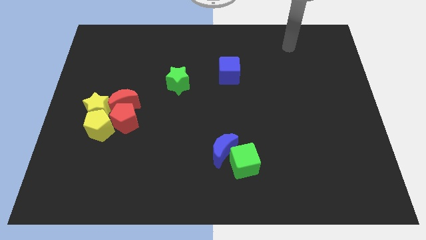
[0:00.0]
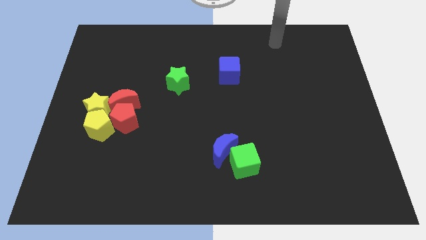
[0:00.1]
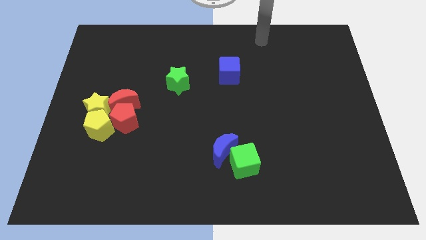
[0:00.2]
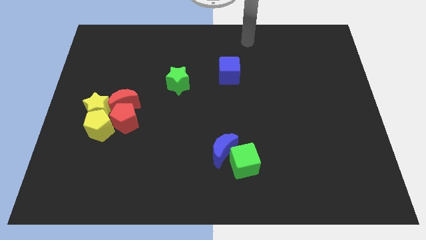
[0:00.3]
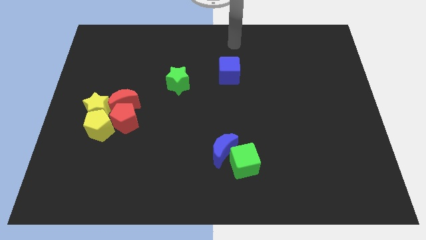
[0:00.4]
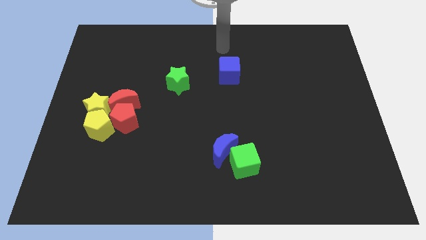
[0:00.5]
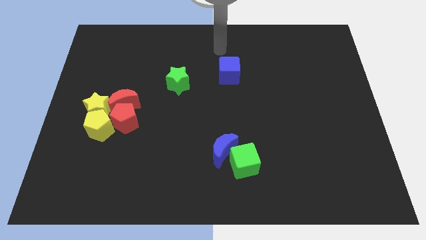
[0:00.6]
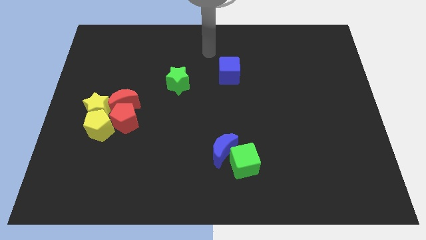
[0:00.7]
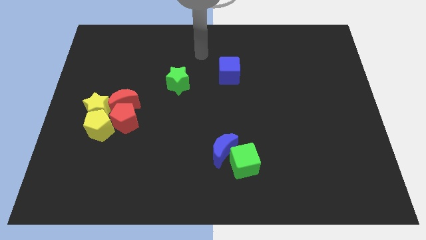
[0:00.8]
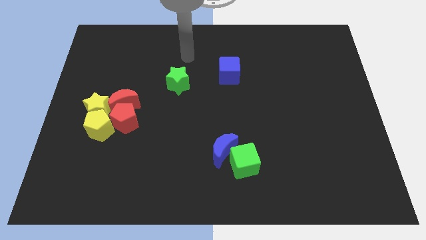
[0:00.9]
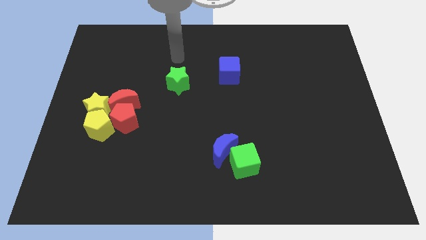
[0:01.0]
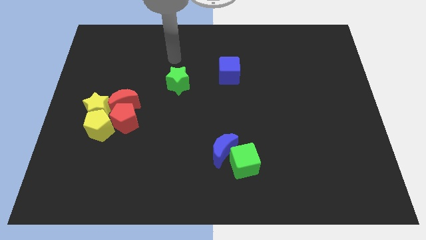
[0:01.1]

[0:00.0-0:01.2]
go near the green star

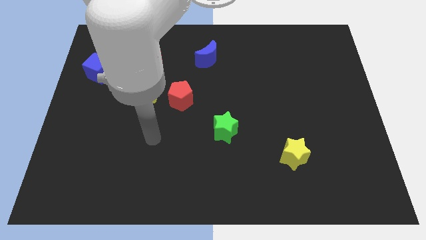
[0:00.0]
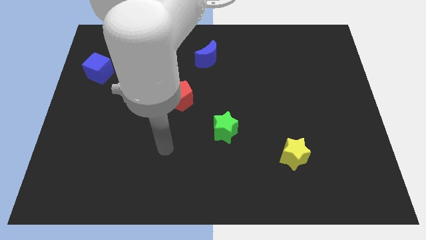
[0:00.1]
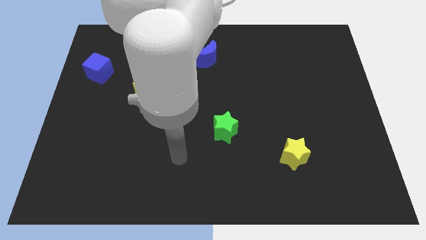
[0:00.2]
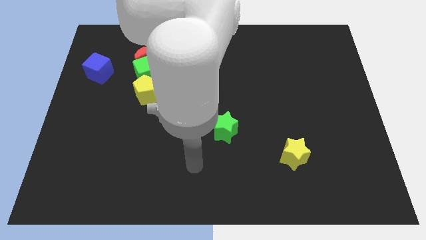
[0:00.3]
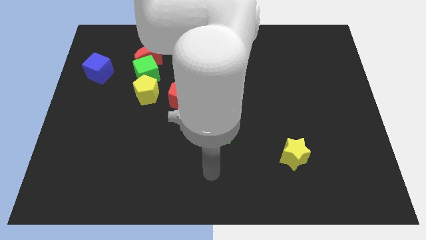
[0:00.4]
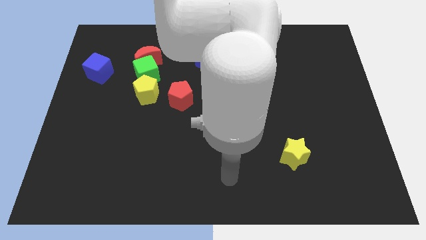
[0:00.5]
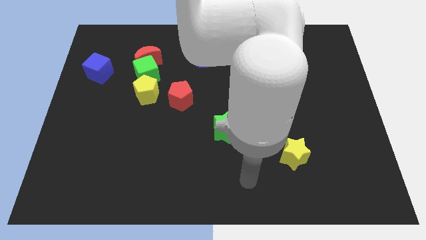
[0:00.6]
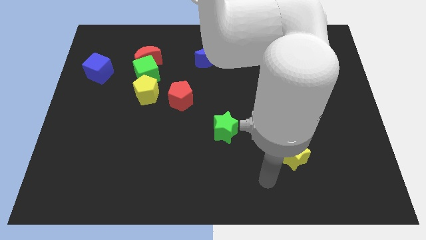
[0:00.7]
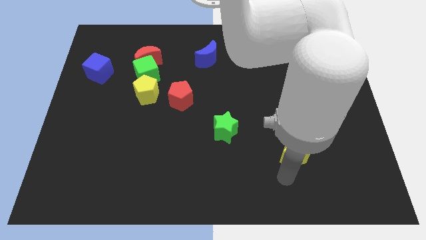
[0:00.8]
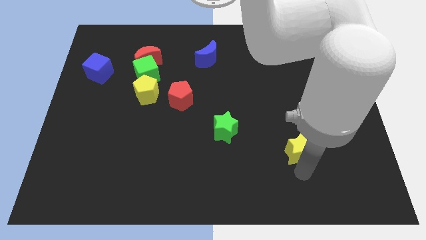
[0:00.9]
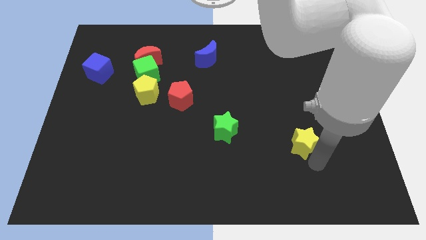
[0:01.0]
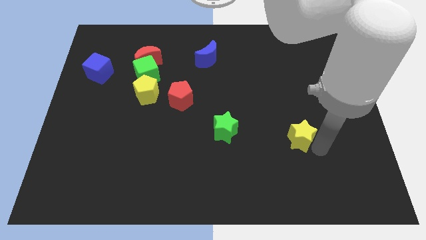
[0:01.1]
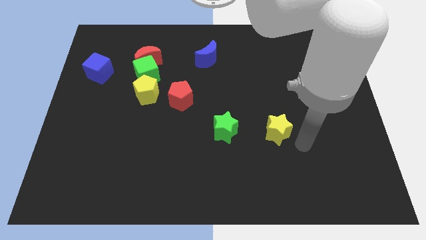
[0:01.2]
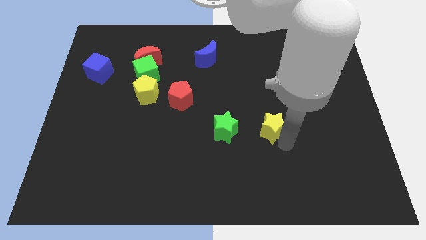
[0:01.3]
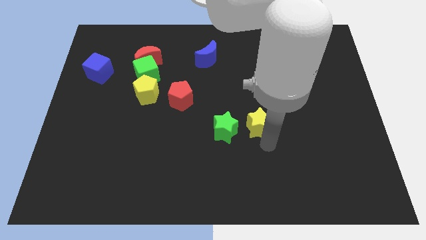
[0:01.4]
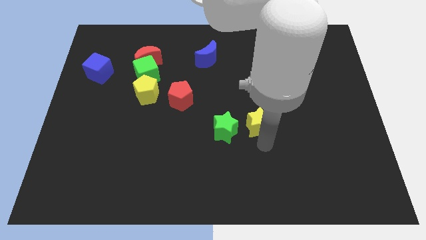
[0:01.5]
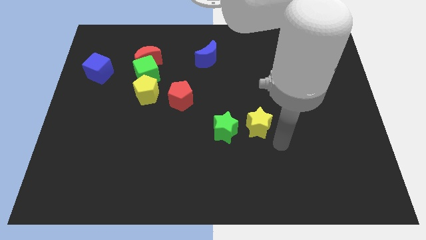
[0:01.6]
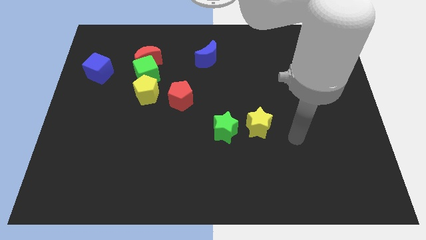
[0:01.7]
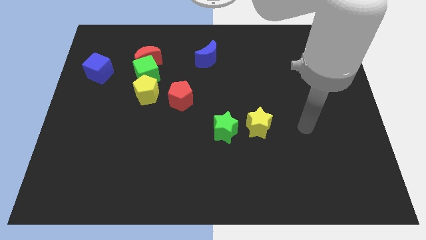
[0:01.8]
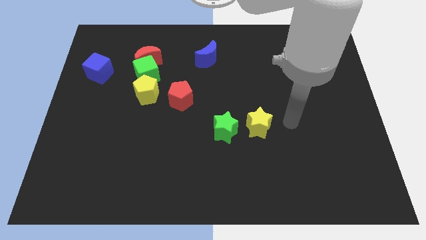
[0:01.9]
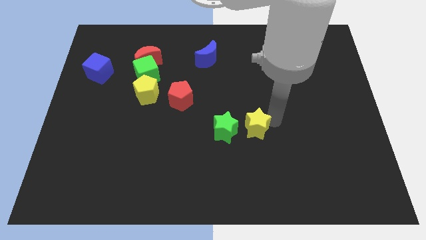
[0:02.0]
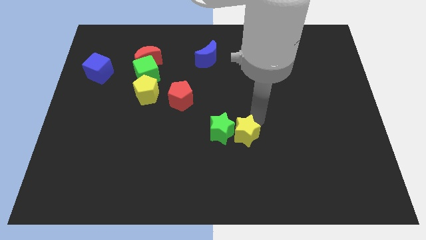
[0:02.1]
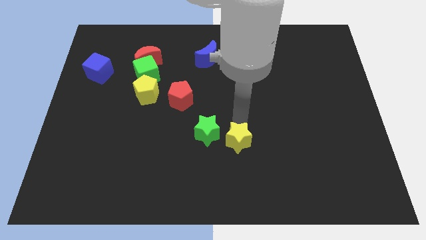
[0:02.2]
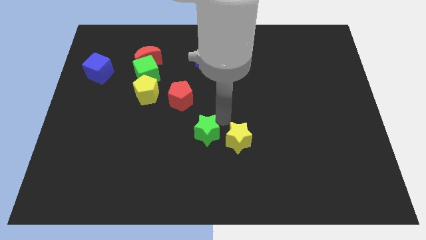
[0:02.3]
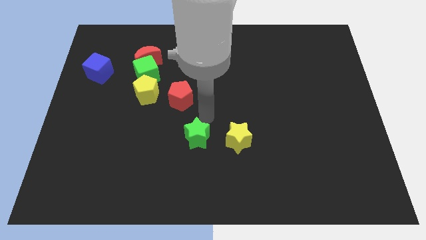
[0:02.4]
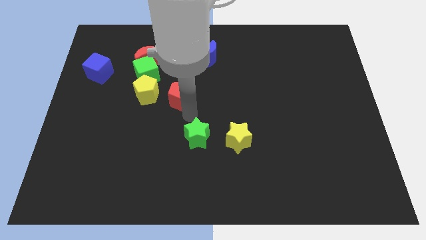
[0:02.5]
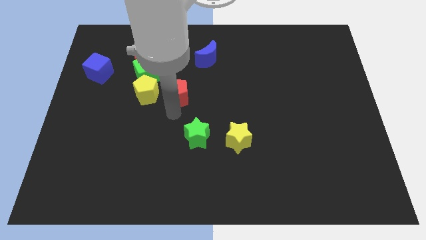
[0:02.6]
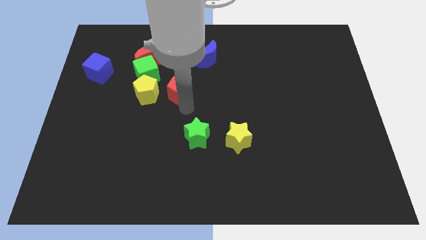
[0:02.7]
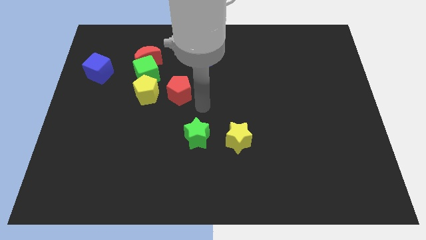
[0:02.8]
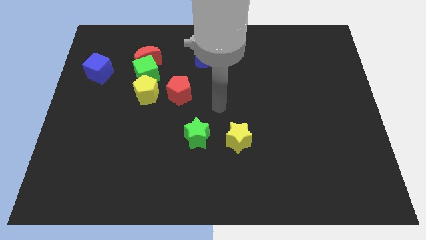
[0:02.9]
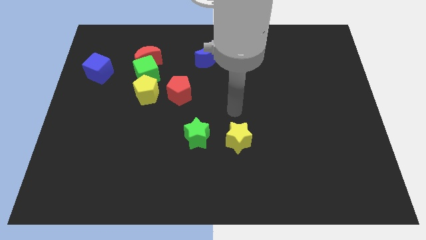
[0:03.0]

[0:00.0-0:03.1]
slide yellow star to the right of green star

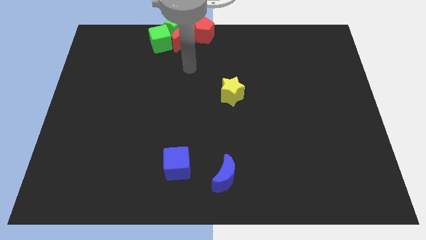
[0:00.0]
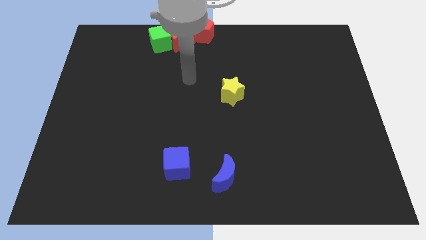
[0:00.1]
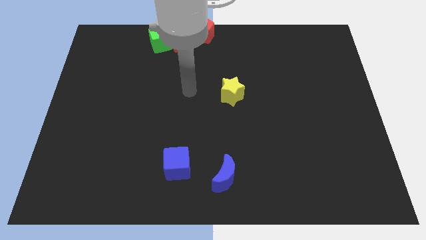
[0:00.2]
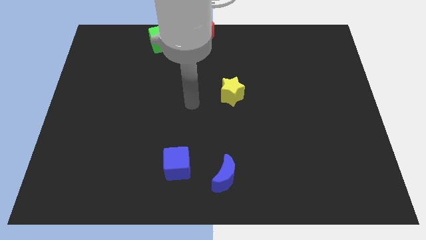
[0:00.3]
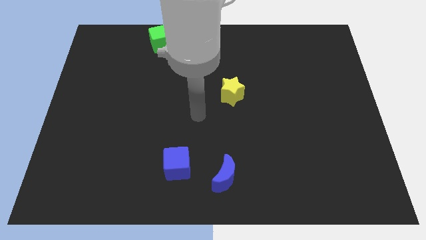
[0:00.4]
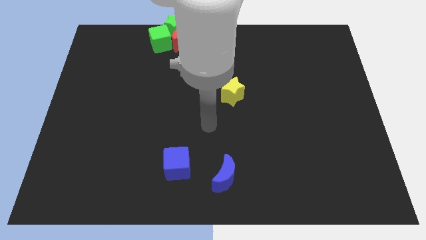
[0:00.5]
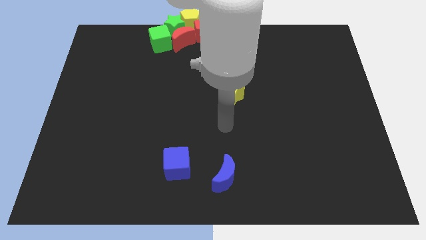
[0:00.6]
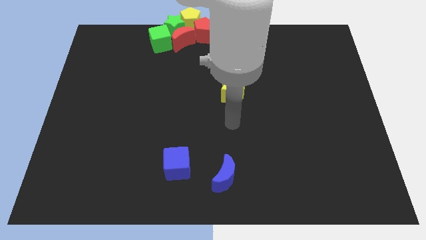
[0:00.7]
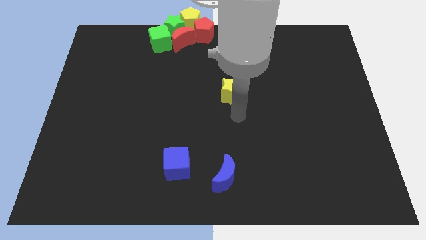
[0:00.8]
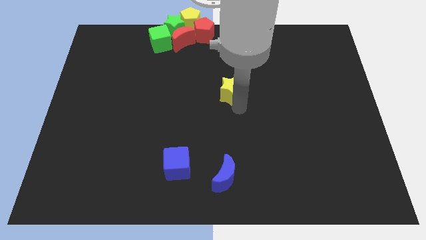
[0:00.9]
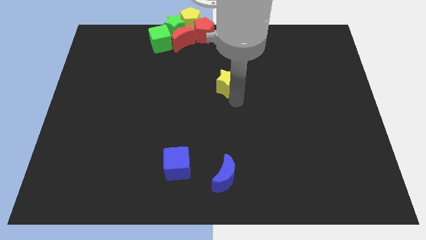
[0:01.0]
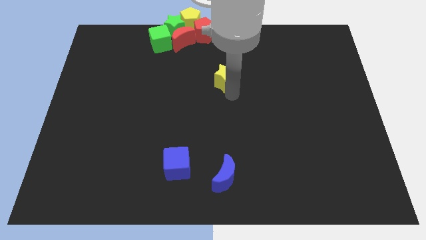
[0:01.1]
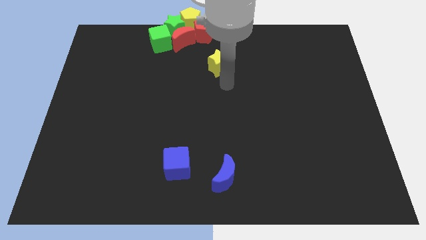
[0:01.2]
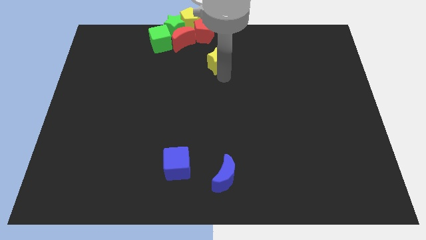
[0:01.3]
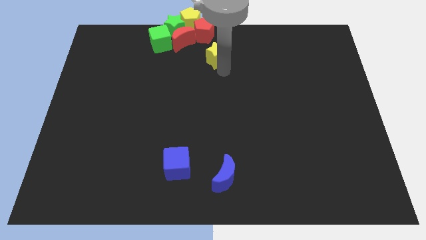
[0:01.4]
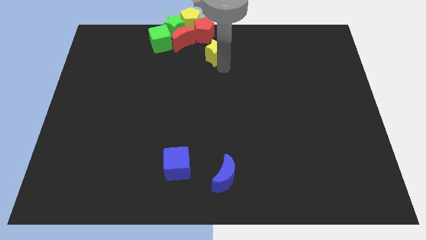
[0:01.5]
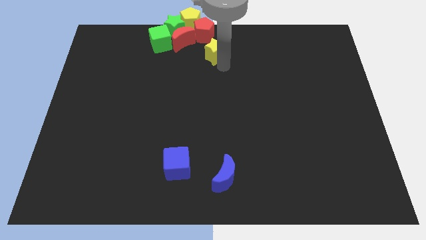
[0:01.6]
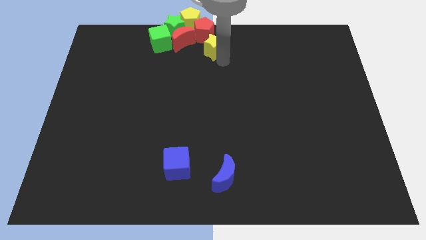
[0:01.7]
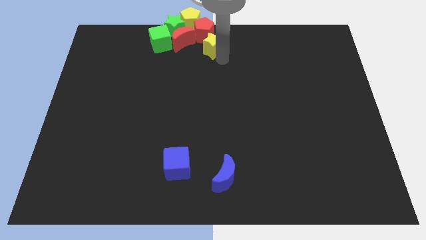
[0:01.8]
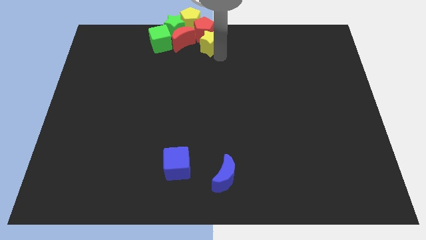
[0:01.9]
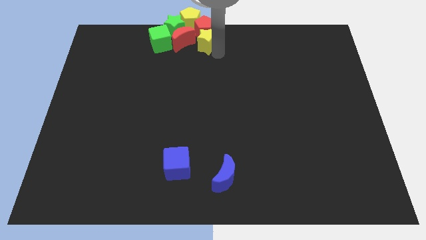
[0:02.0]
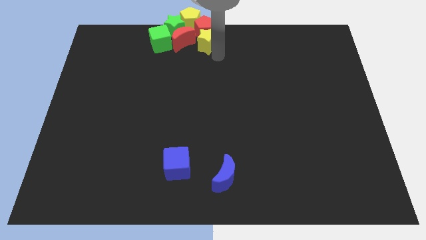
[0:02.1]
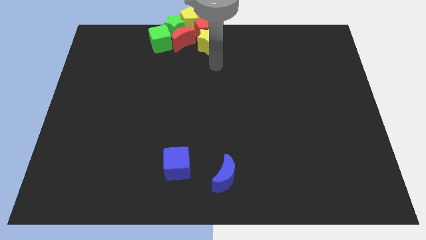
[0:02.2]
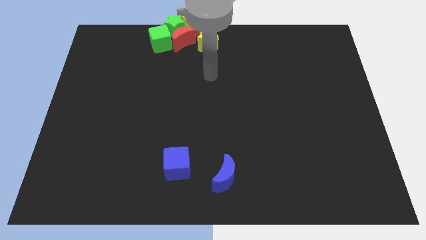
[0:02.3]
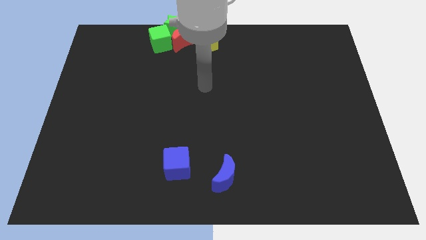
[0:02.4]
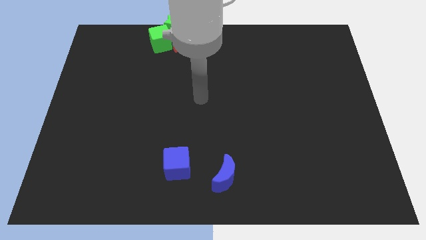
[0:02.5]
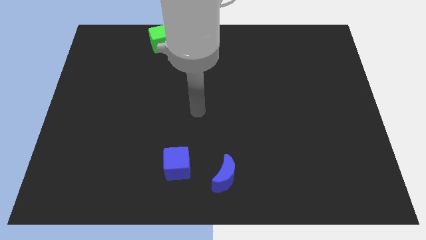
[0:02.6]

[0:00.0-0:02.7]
push the yellow star into the red pentagon

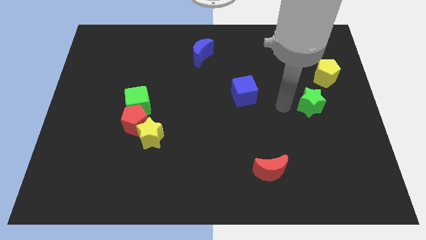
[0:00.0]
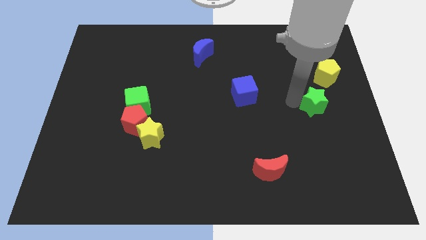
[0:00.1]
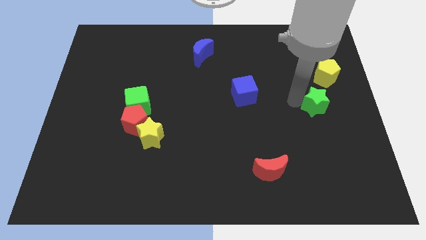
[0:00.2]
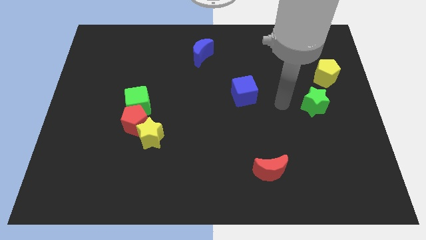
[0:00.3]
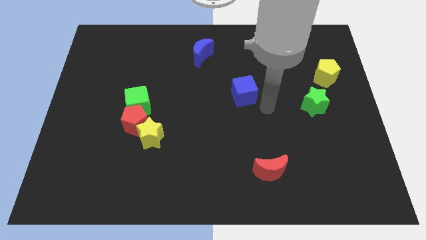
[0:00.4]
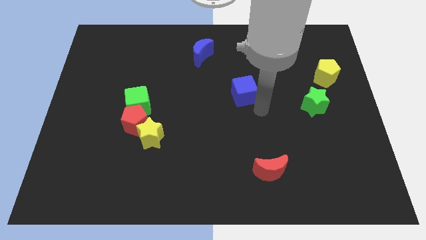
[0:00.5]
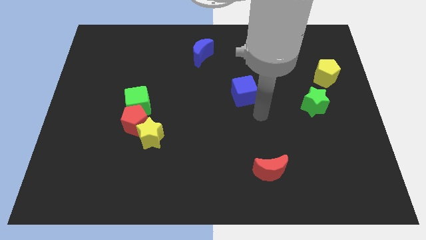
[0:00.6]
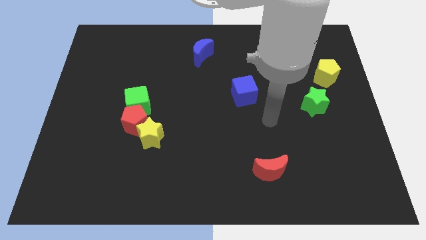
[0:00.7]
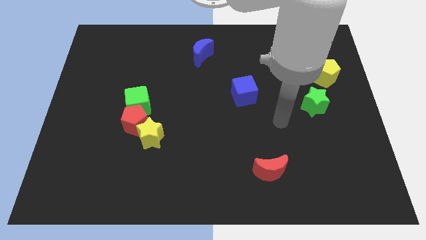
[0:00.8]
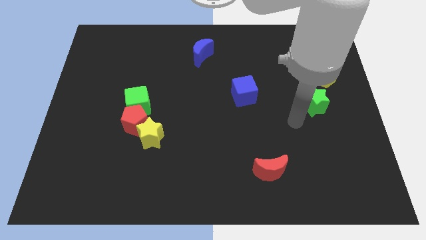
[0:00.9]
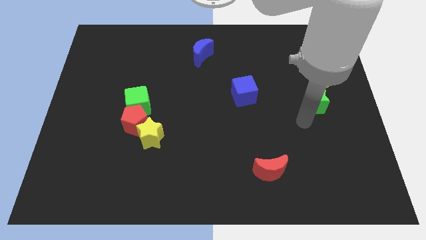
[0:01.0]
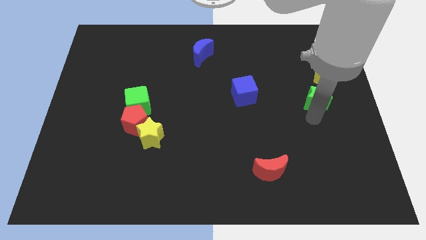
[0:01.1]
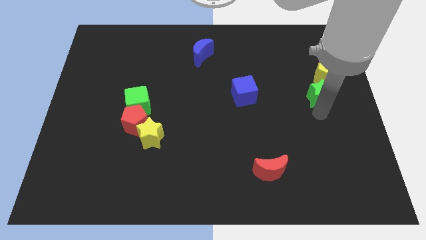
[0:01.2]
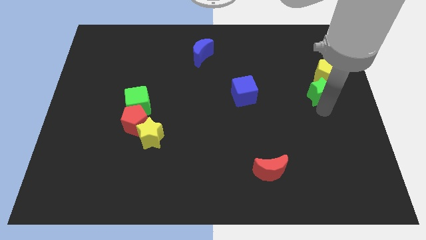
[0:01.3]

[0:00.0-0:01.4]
push the green star towards the botom side of the yellow pentagon

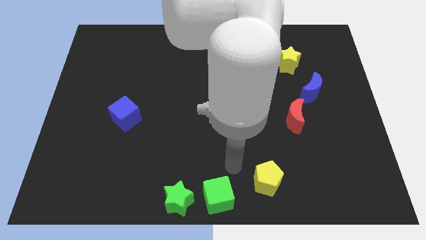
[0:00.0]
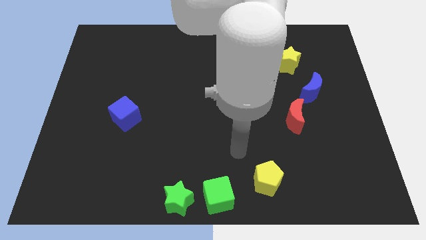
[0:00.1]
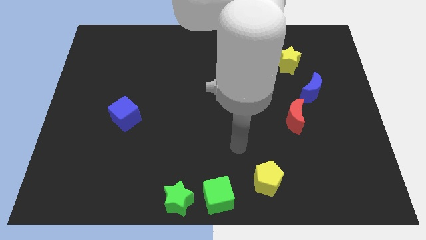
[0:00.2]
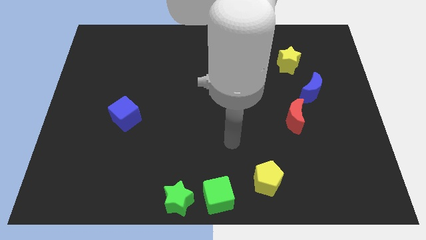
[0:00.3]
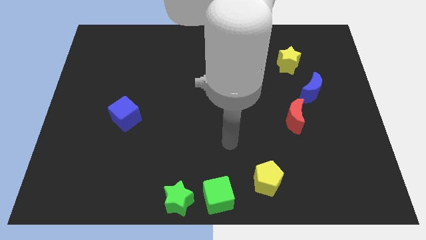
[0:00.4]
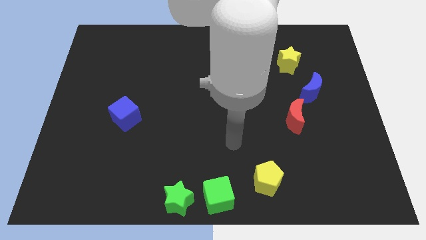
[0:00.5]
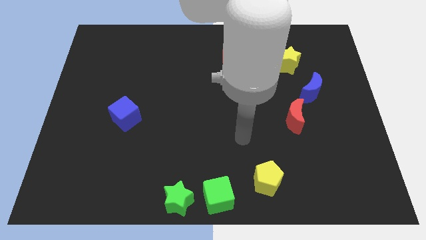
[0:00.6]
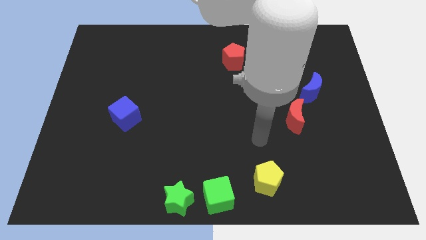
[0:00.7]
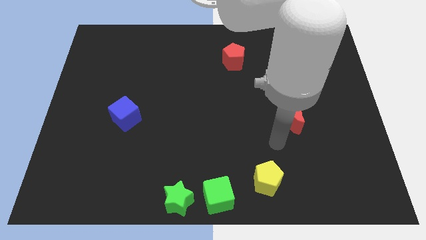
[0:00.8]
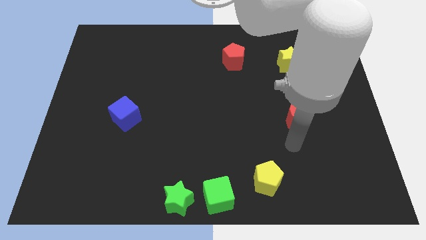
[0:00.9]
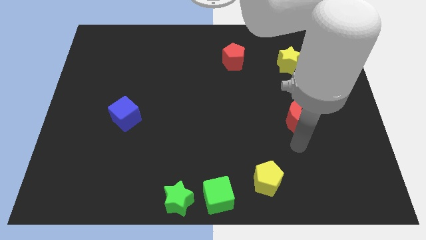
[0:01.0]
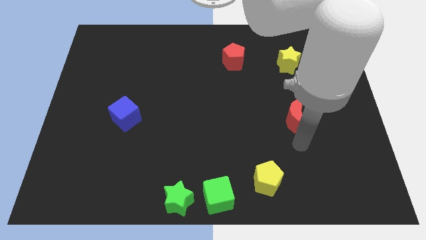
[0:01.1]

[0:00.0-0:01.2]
move your arm to the bottom of the red crescent
